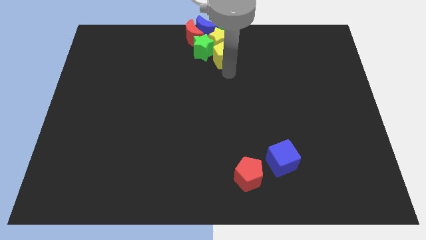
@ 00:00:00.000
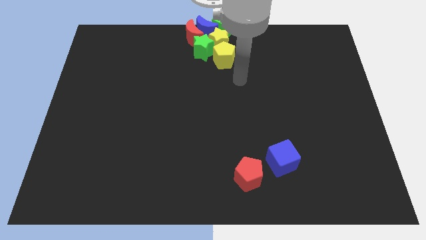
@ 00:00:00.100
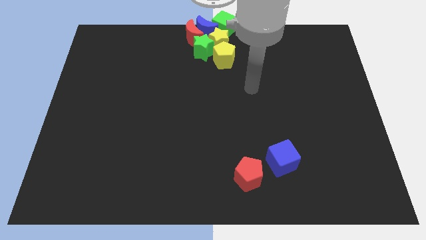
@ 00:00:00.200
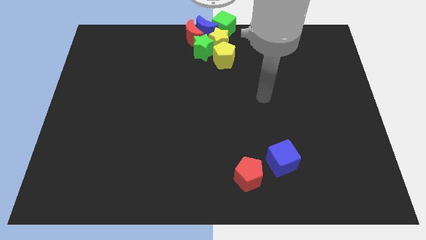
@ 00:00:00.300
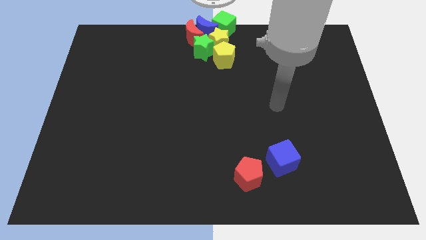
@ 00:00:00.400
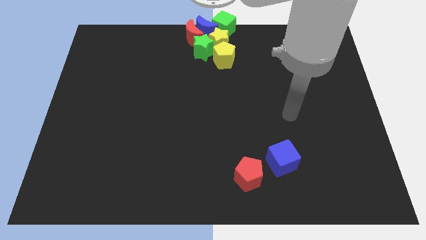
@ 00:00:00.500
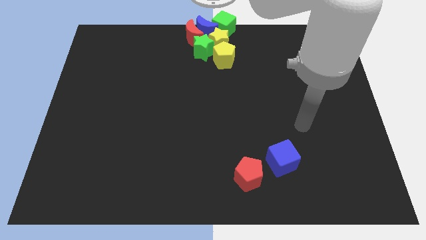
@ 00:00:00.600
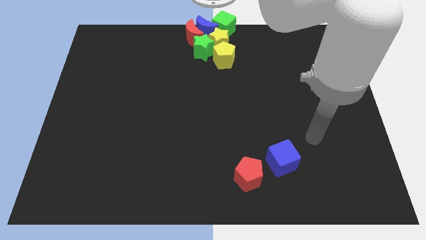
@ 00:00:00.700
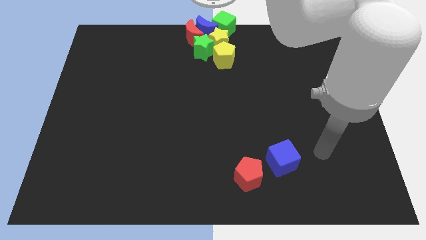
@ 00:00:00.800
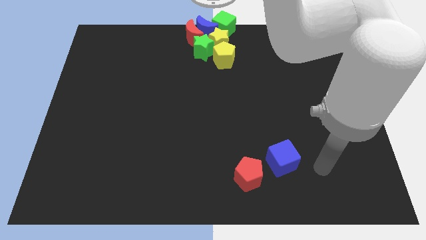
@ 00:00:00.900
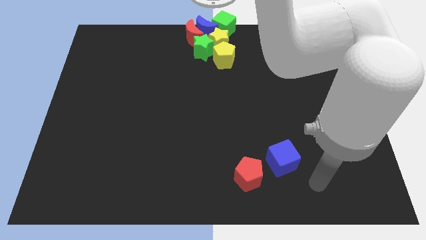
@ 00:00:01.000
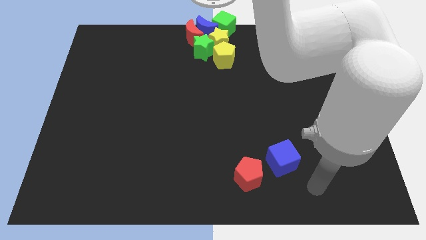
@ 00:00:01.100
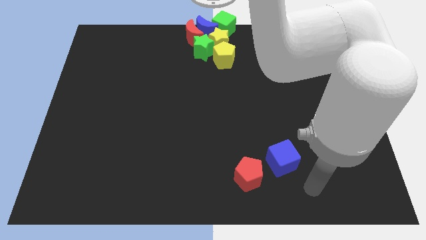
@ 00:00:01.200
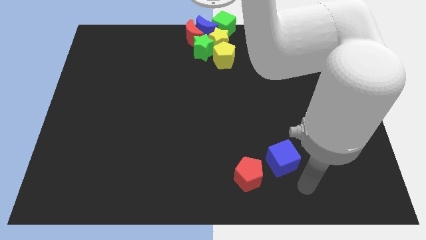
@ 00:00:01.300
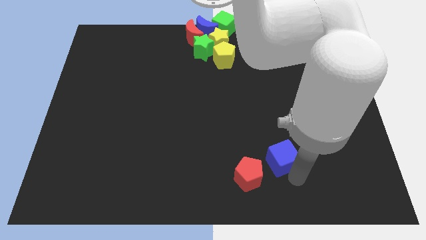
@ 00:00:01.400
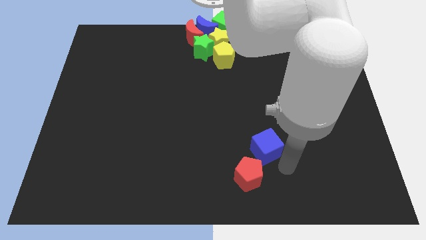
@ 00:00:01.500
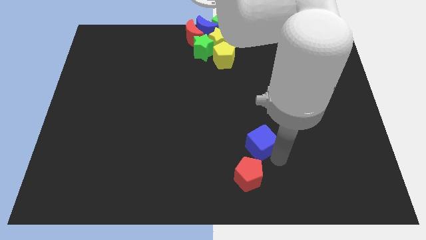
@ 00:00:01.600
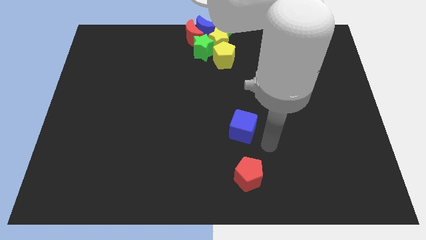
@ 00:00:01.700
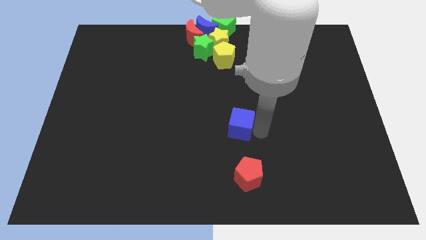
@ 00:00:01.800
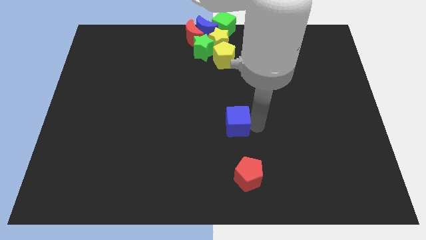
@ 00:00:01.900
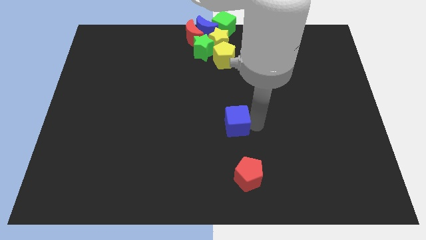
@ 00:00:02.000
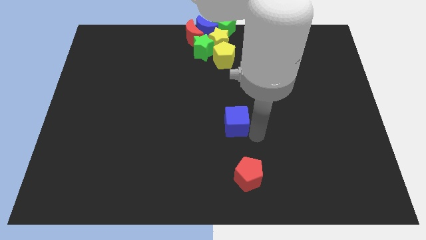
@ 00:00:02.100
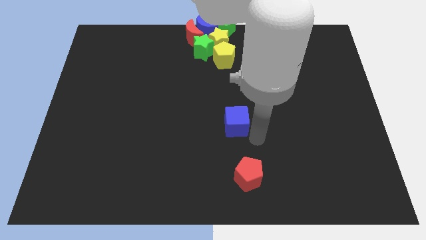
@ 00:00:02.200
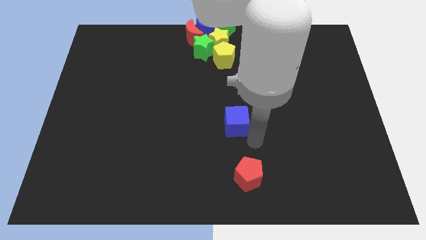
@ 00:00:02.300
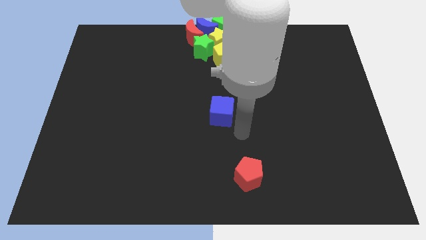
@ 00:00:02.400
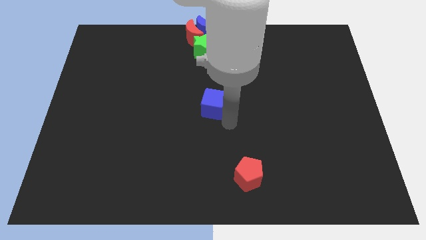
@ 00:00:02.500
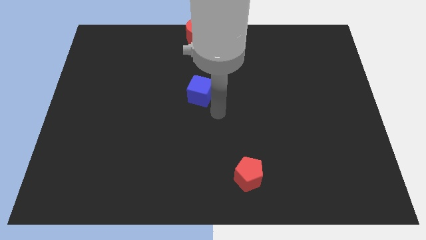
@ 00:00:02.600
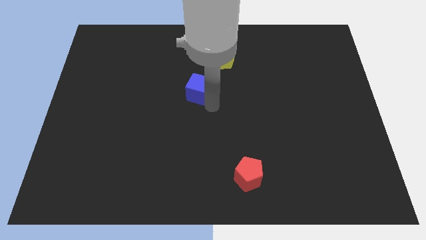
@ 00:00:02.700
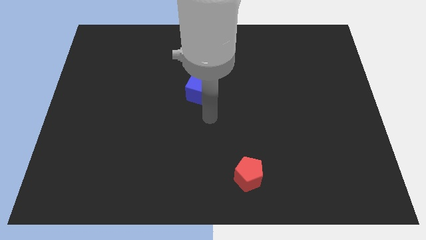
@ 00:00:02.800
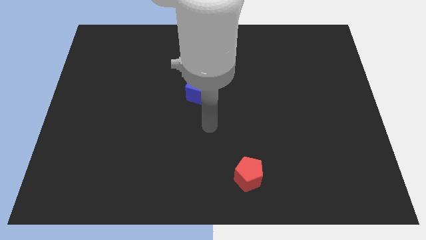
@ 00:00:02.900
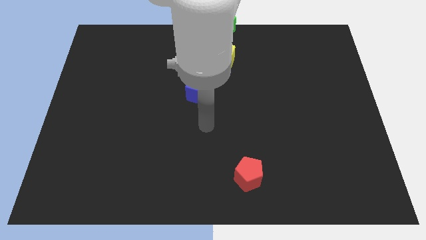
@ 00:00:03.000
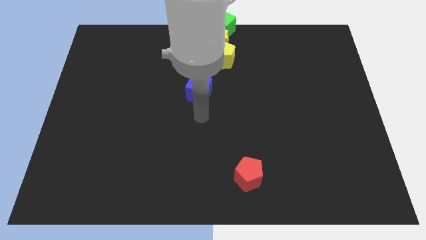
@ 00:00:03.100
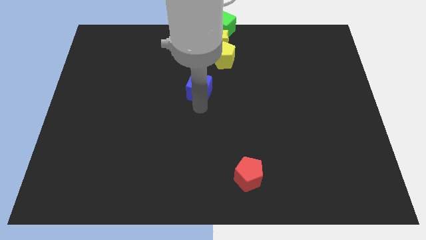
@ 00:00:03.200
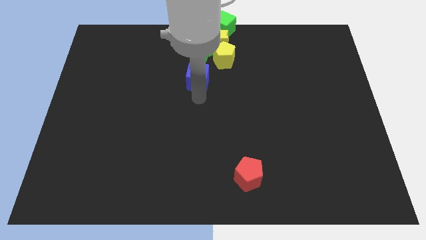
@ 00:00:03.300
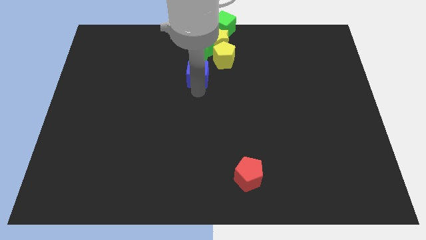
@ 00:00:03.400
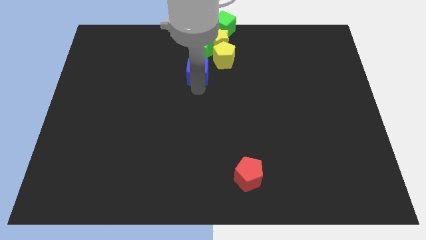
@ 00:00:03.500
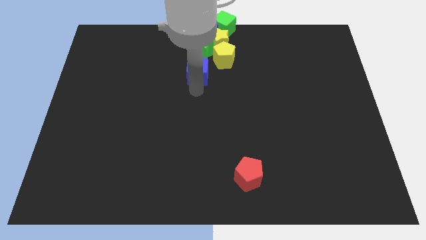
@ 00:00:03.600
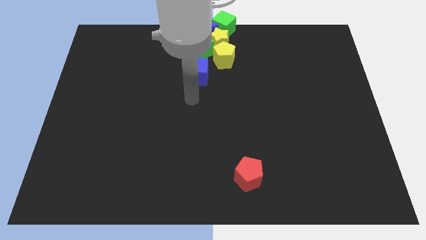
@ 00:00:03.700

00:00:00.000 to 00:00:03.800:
place the blue cube vertically to the bottom of the green star

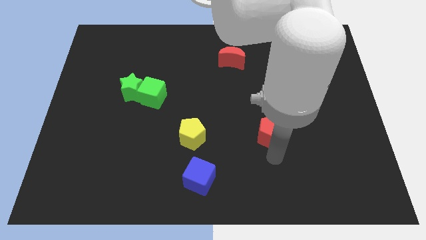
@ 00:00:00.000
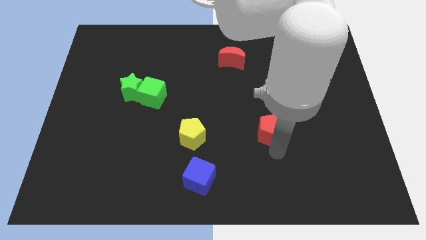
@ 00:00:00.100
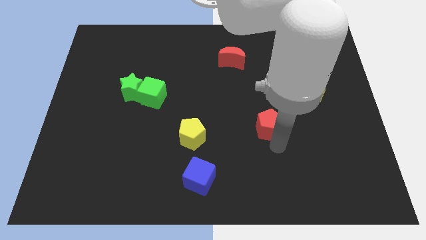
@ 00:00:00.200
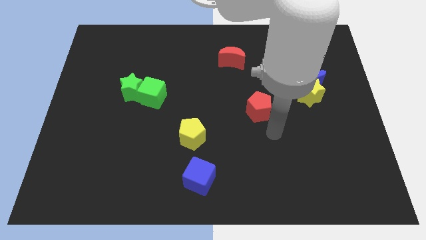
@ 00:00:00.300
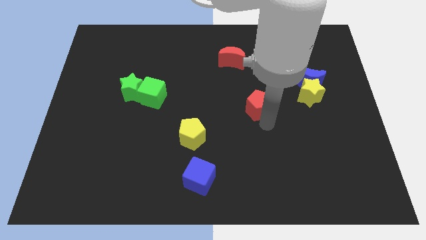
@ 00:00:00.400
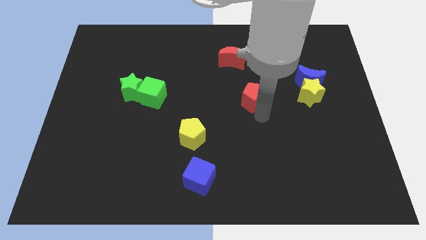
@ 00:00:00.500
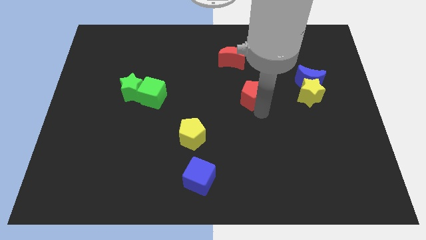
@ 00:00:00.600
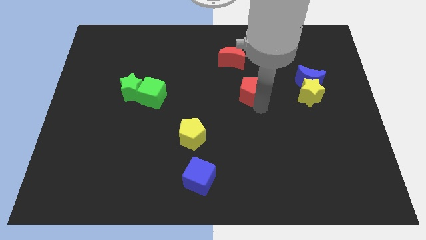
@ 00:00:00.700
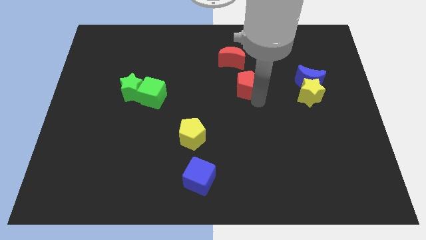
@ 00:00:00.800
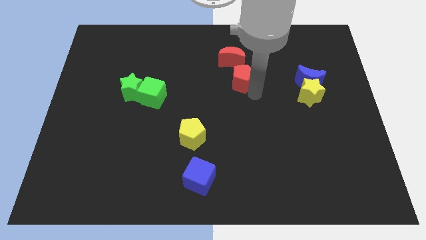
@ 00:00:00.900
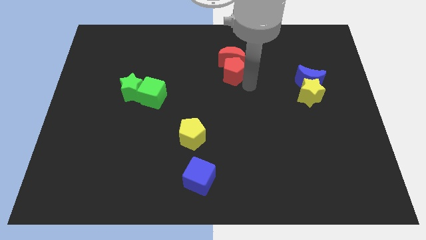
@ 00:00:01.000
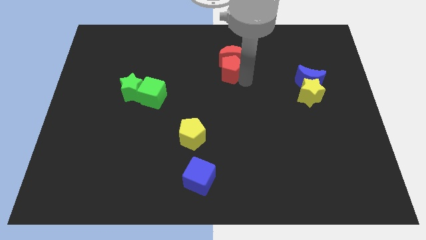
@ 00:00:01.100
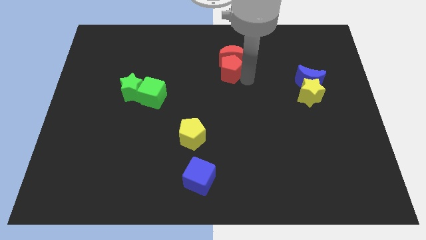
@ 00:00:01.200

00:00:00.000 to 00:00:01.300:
drag the red pentagon into the bottom side of the red crescent

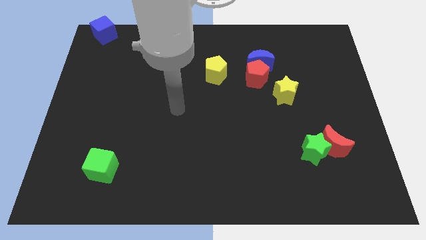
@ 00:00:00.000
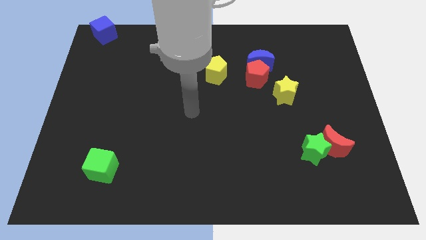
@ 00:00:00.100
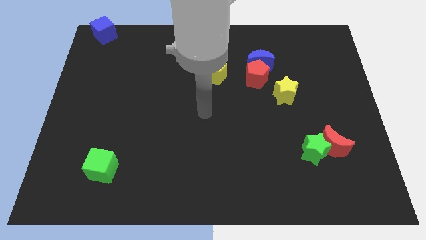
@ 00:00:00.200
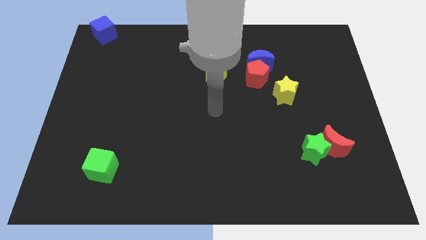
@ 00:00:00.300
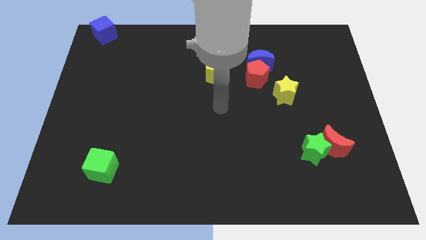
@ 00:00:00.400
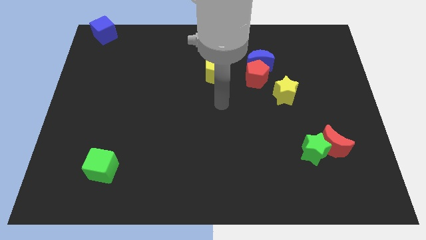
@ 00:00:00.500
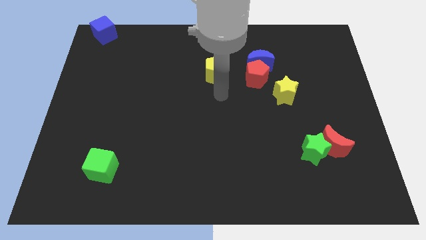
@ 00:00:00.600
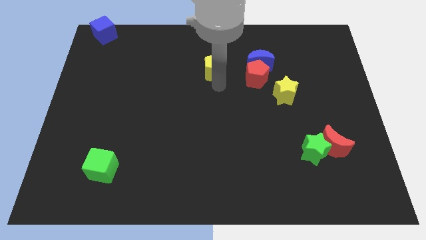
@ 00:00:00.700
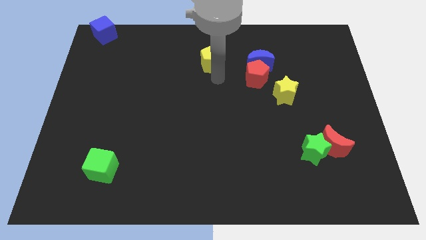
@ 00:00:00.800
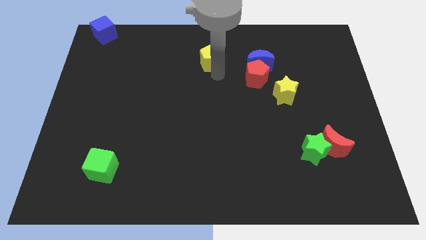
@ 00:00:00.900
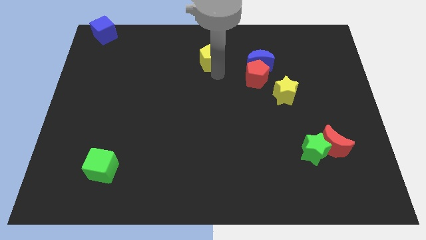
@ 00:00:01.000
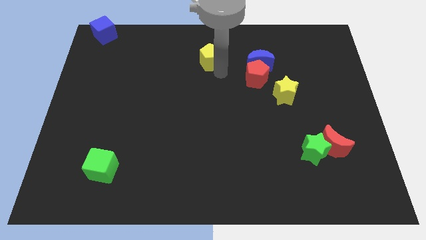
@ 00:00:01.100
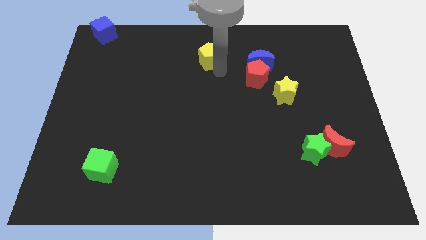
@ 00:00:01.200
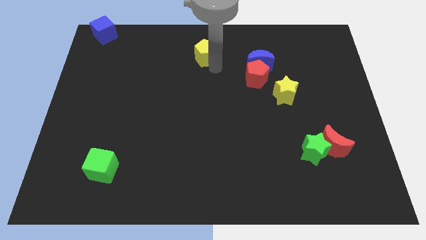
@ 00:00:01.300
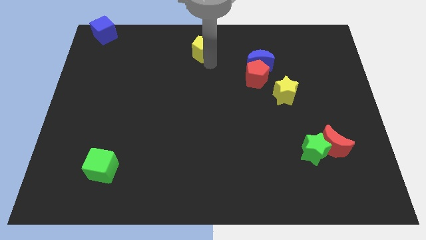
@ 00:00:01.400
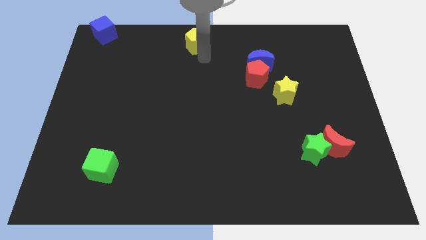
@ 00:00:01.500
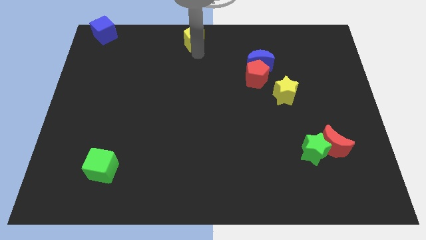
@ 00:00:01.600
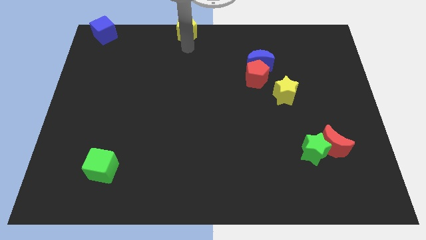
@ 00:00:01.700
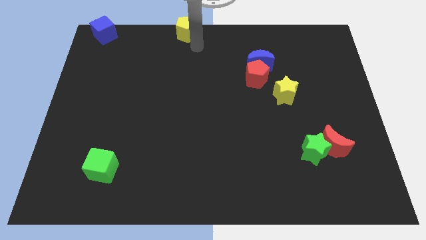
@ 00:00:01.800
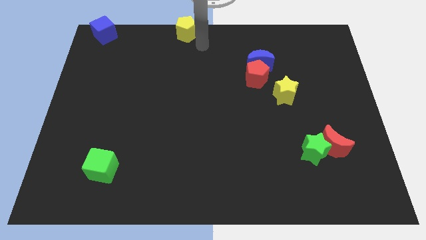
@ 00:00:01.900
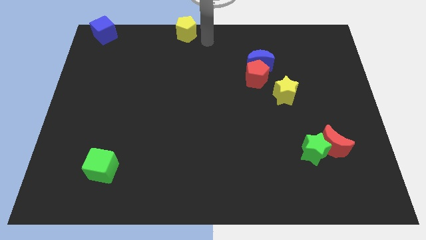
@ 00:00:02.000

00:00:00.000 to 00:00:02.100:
place the yellow pentagon horizontally to the right side of the blue cube

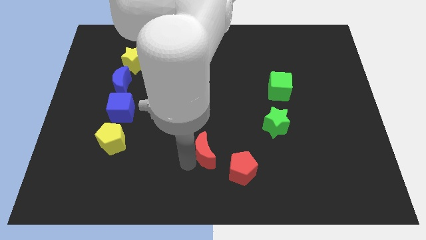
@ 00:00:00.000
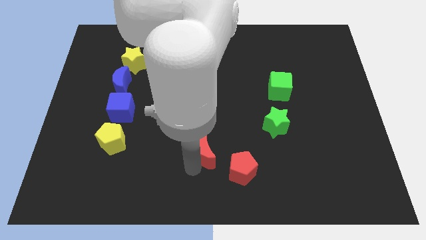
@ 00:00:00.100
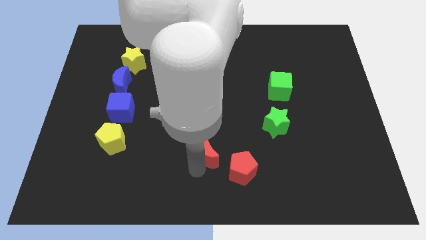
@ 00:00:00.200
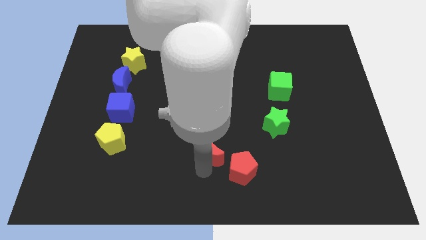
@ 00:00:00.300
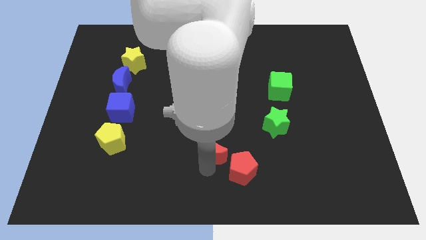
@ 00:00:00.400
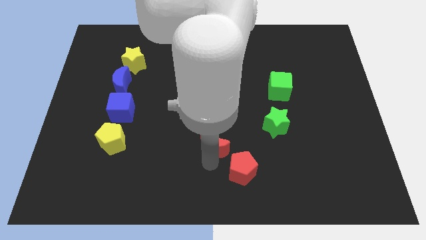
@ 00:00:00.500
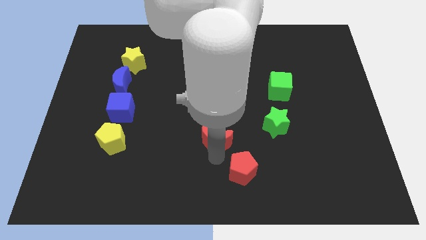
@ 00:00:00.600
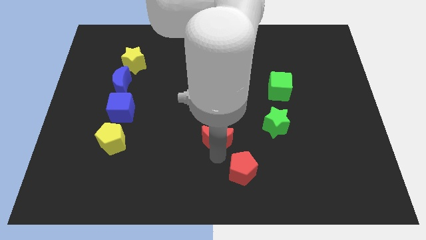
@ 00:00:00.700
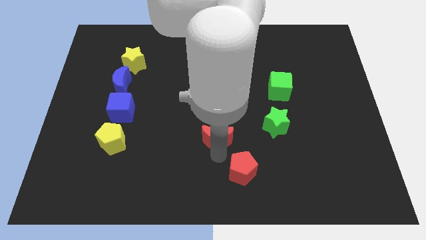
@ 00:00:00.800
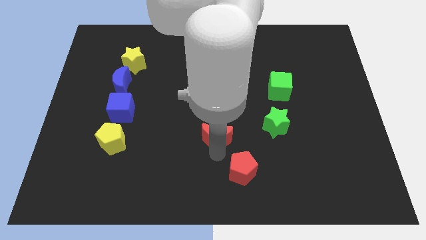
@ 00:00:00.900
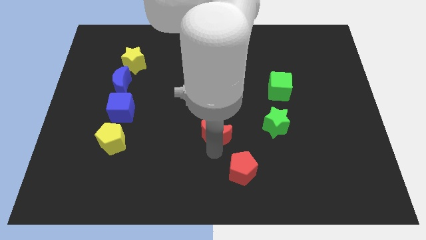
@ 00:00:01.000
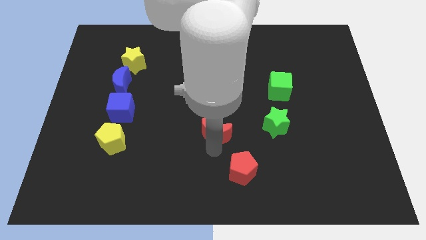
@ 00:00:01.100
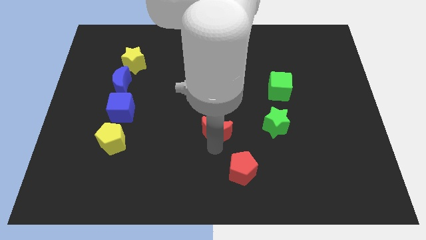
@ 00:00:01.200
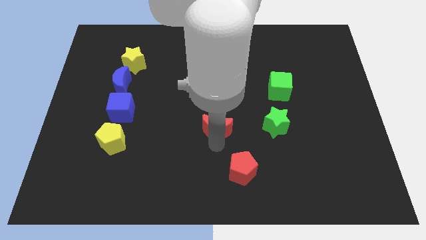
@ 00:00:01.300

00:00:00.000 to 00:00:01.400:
push the red crescent slightly to the top

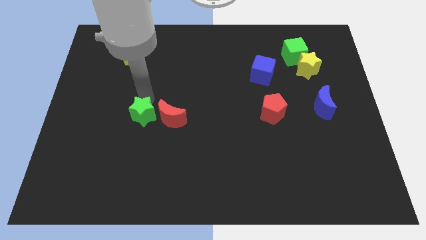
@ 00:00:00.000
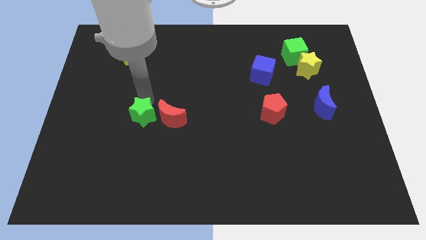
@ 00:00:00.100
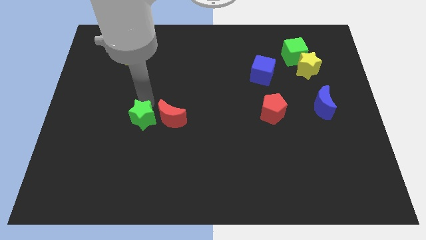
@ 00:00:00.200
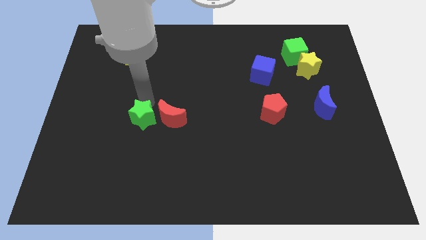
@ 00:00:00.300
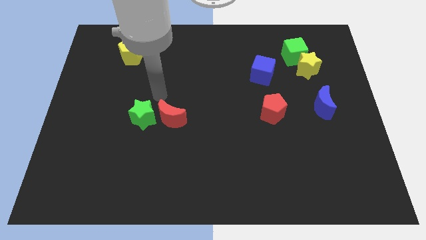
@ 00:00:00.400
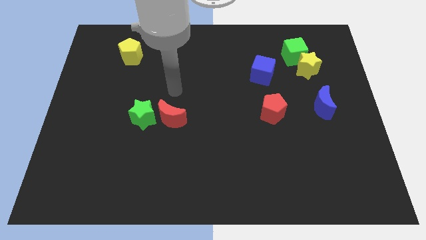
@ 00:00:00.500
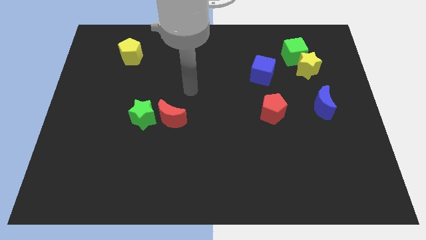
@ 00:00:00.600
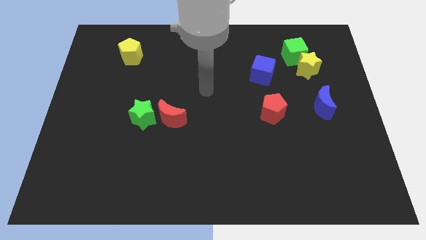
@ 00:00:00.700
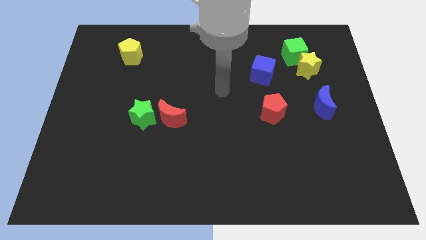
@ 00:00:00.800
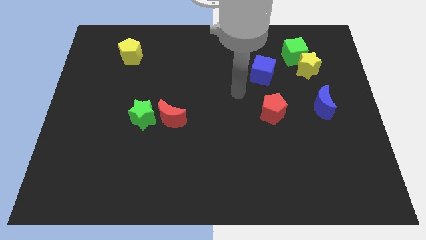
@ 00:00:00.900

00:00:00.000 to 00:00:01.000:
go away from the green star
